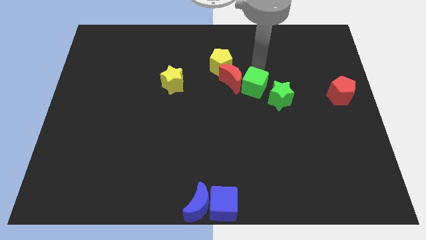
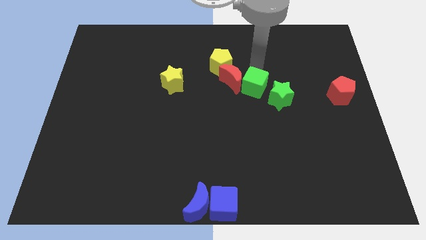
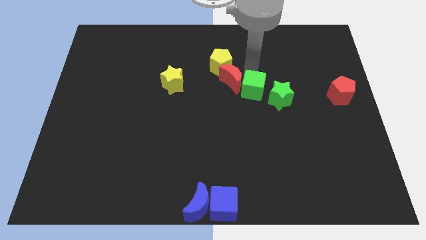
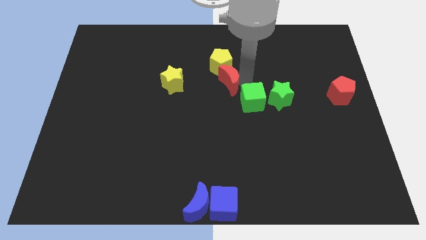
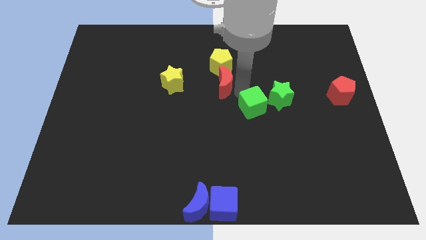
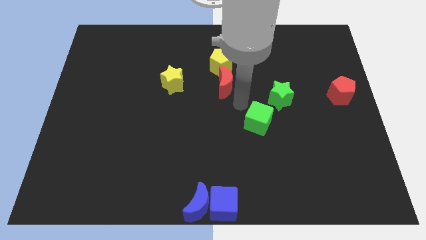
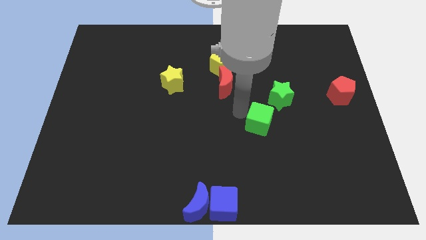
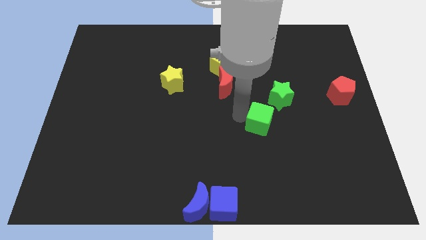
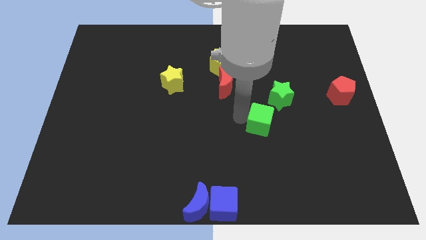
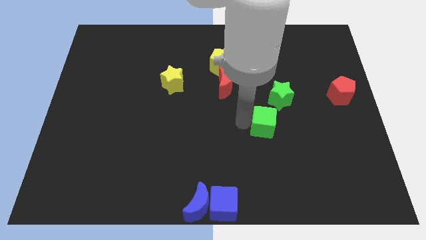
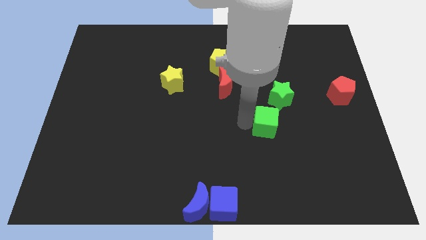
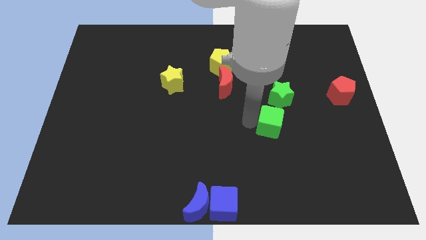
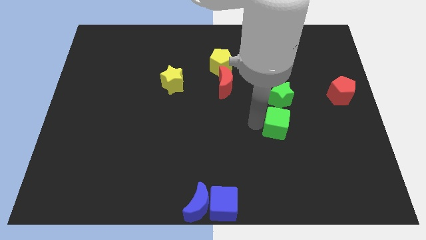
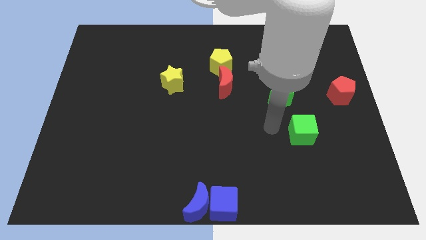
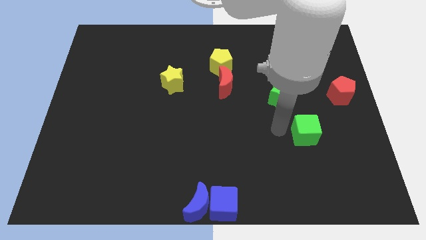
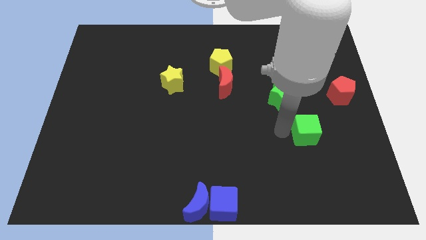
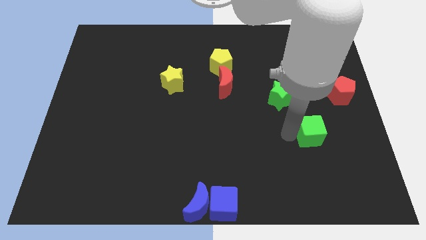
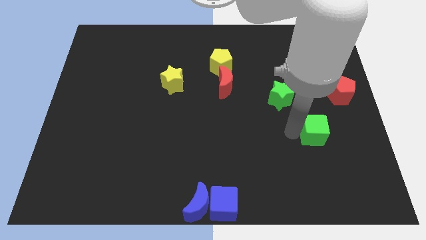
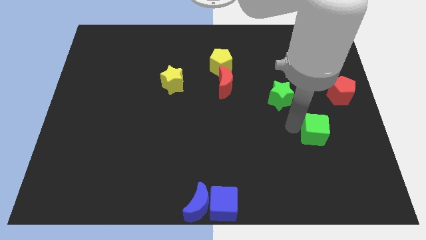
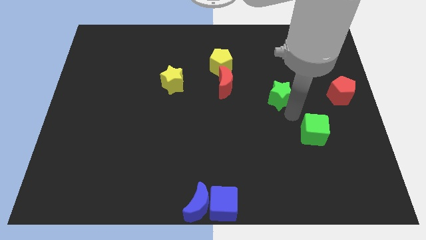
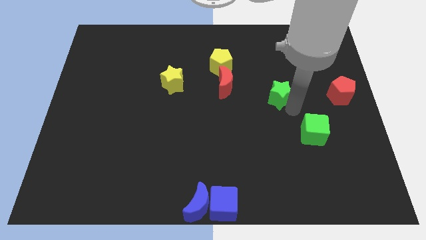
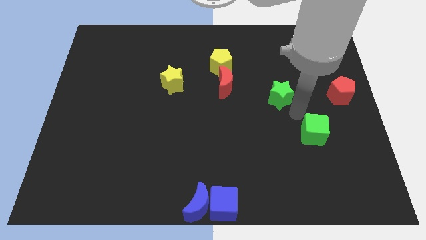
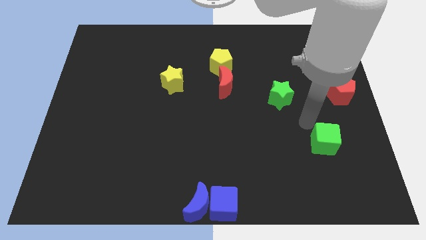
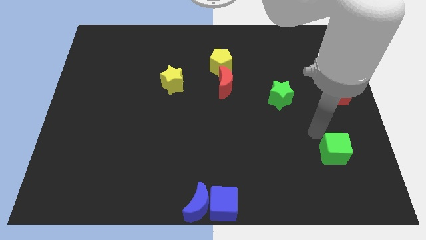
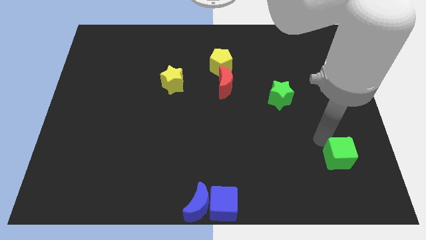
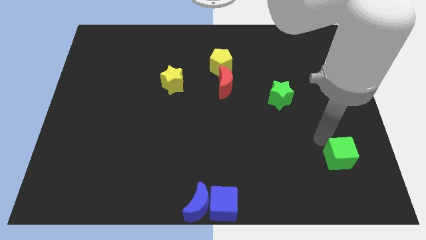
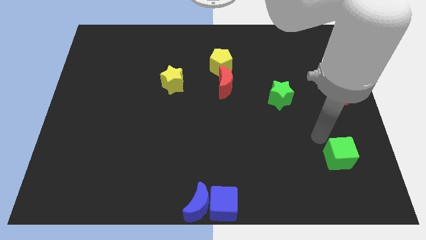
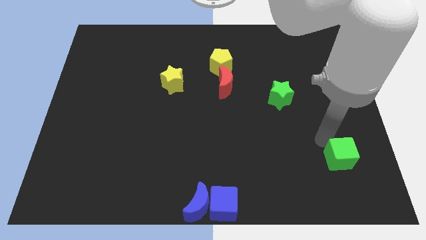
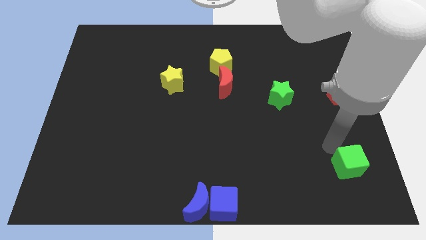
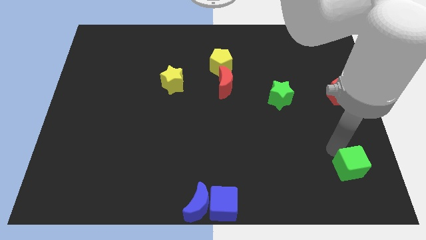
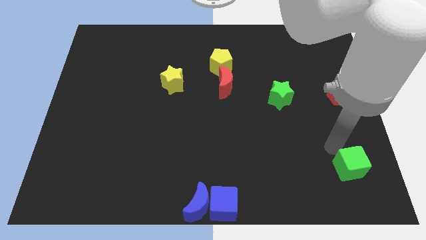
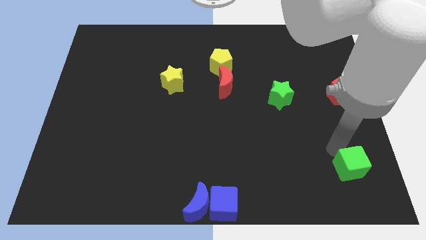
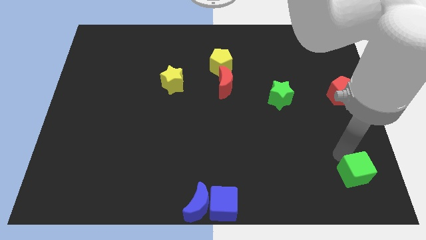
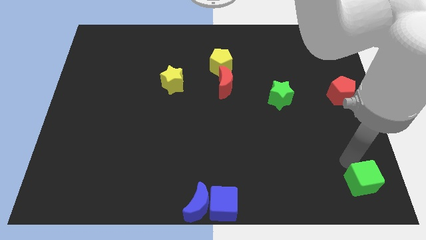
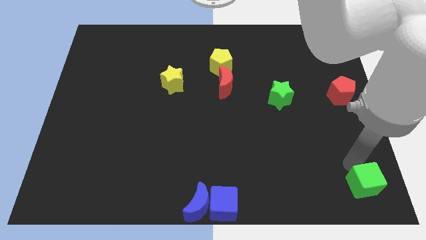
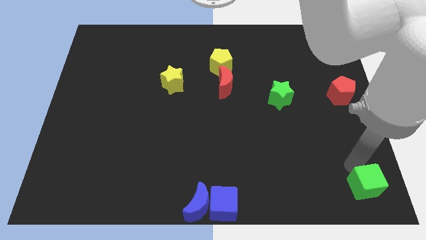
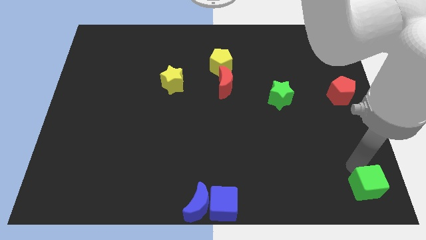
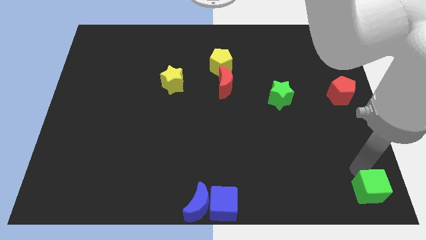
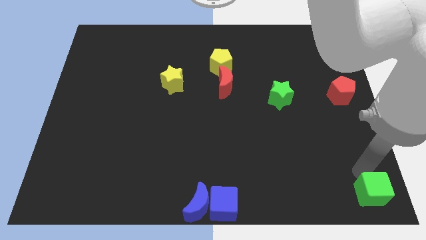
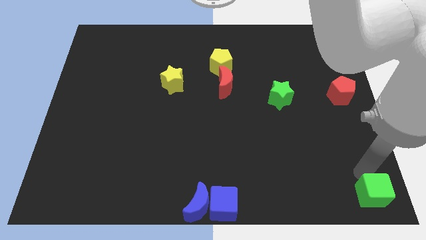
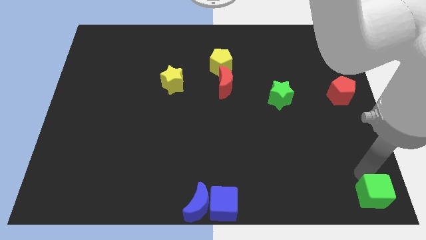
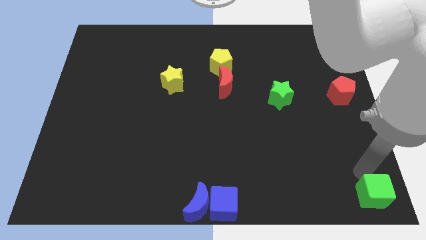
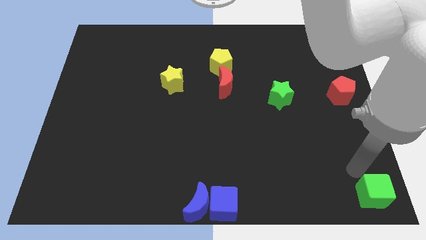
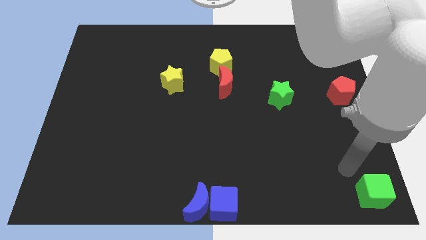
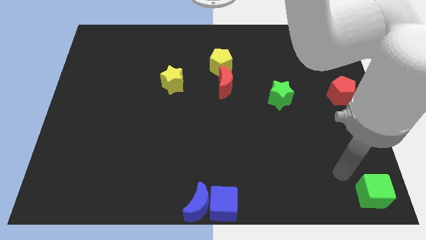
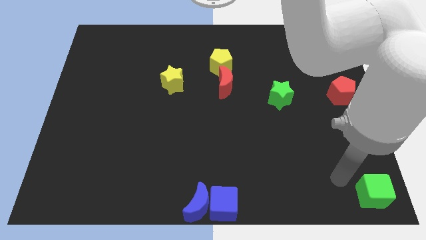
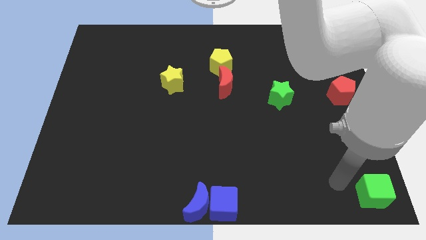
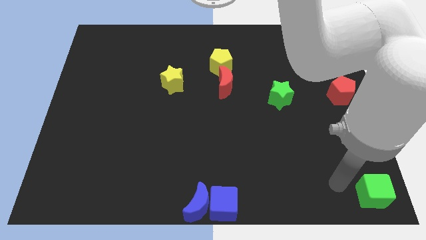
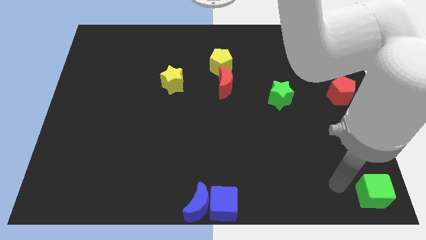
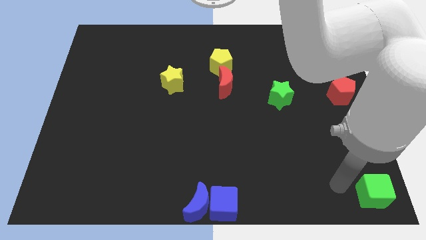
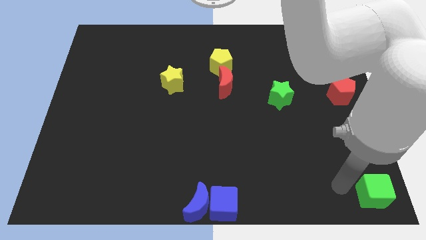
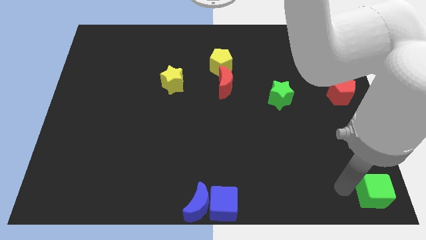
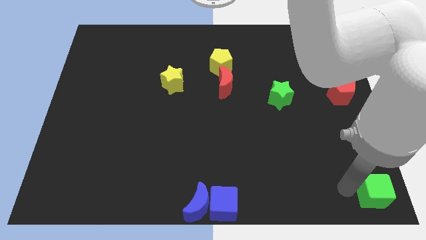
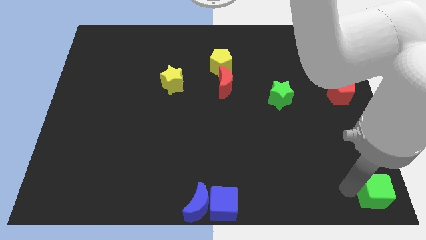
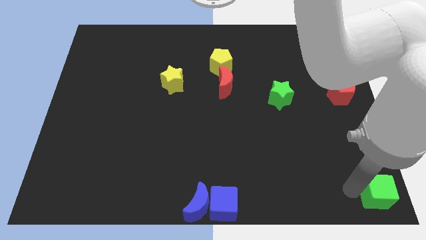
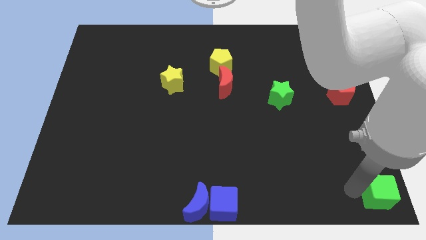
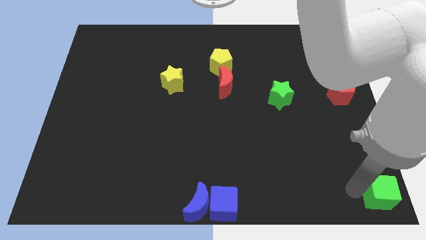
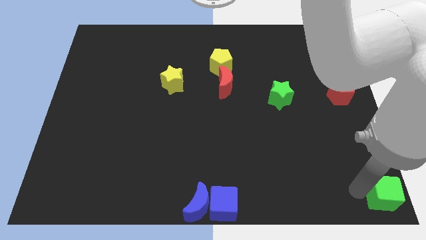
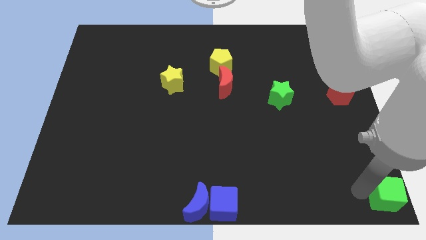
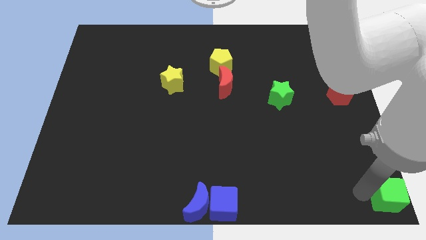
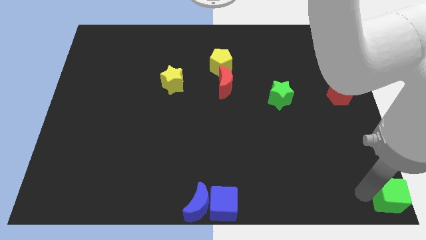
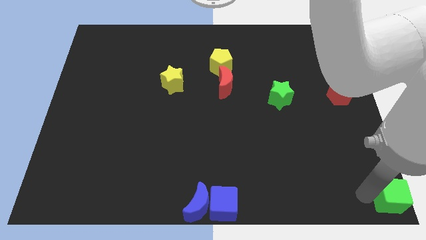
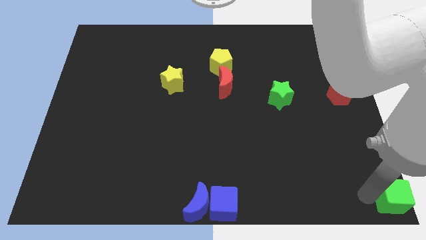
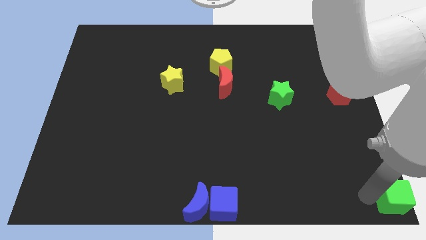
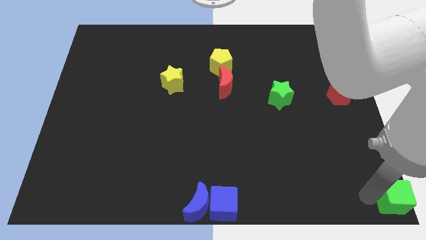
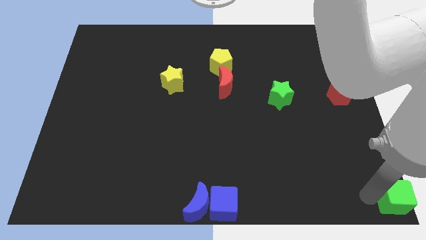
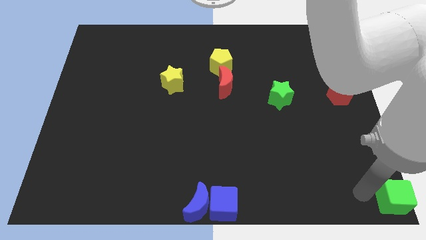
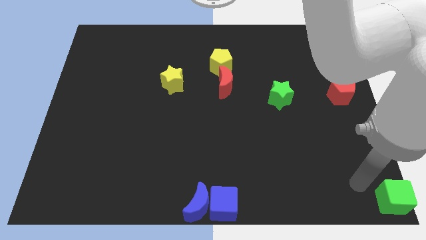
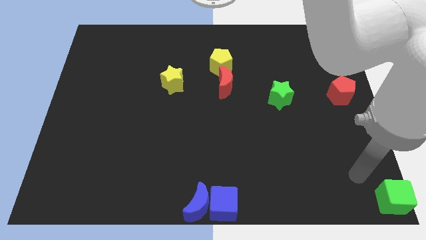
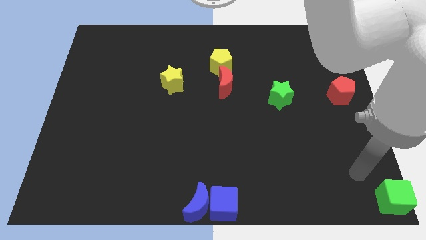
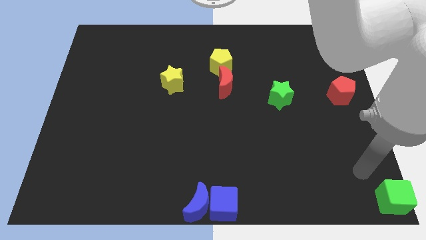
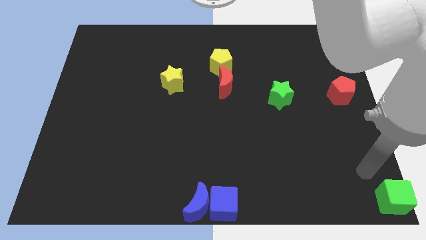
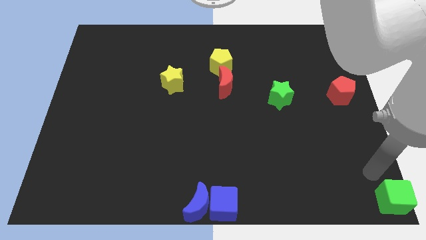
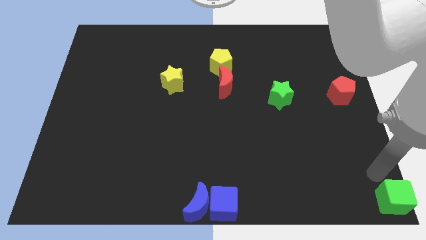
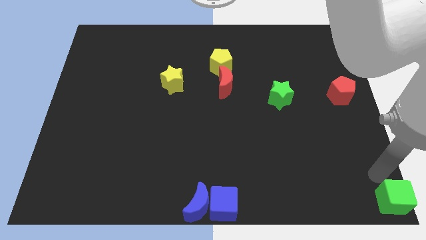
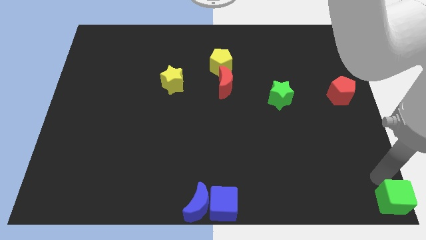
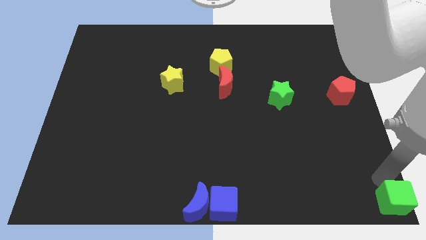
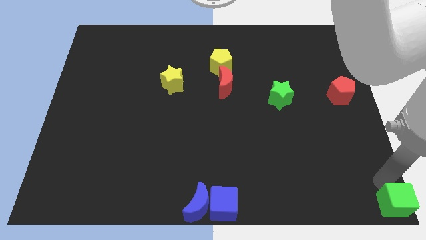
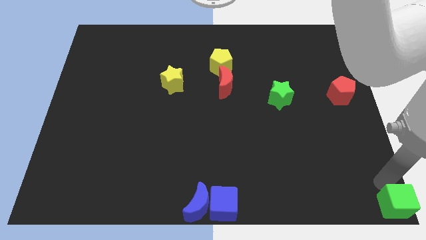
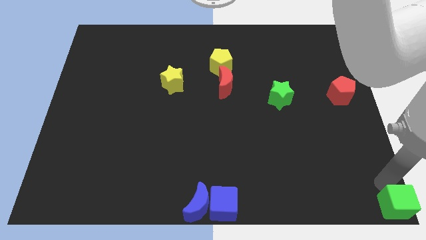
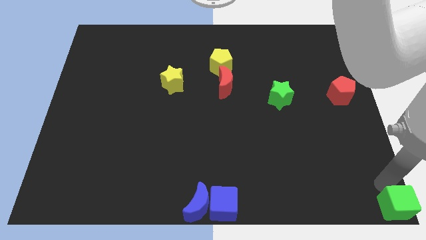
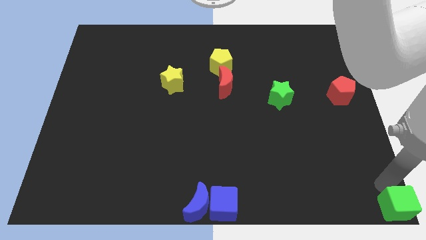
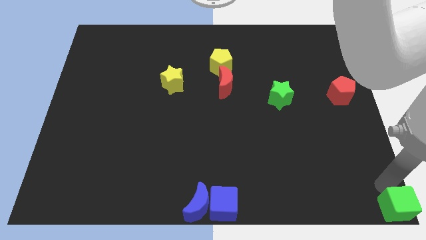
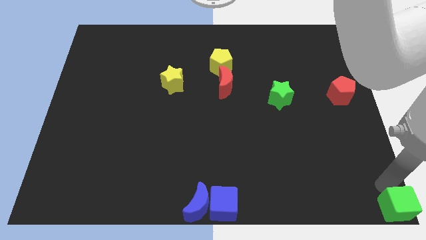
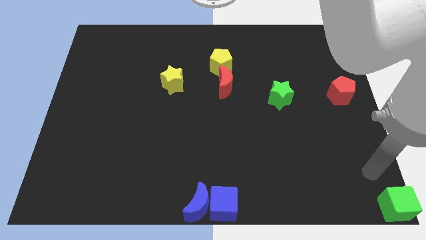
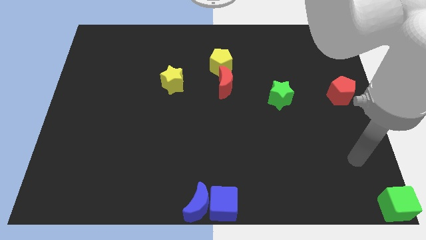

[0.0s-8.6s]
push the green cube to the bottom right corner

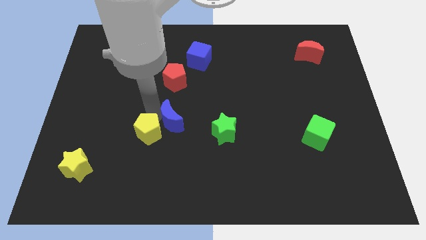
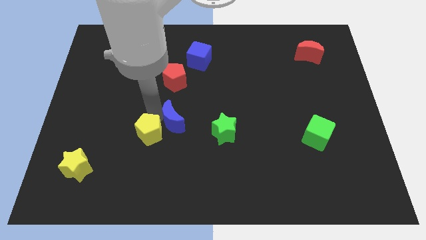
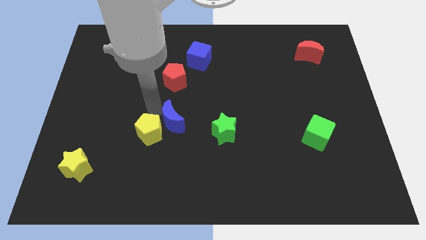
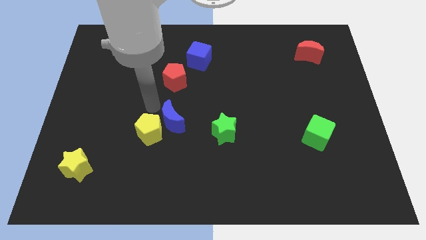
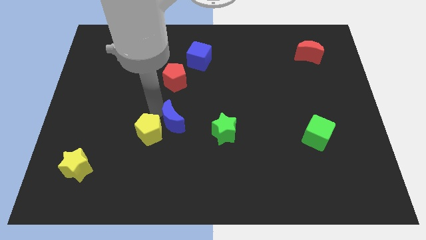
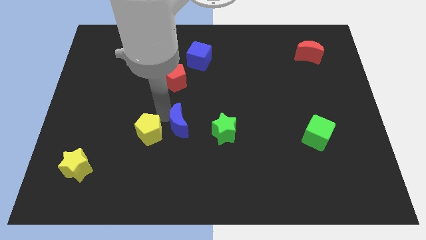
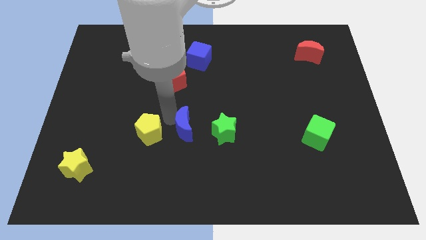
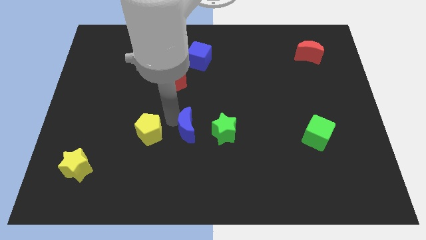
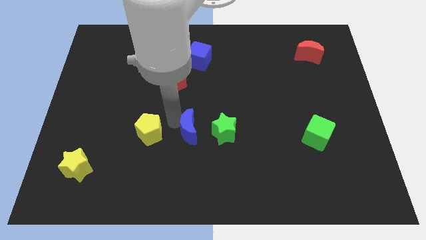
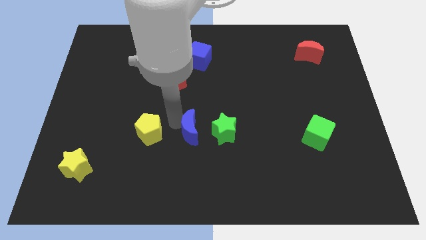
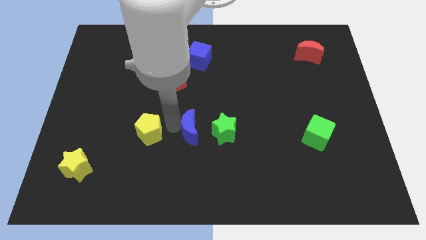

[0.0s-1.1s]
place the blue crescent in between the green star and the yellow pentagon
